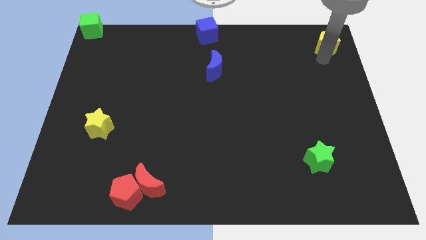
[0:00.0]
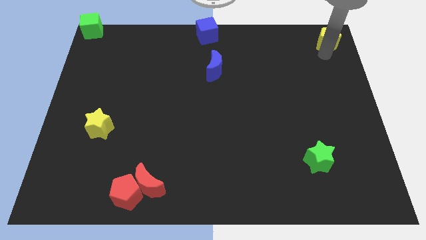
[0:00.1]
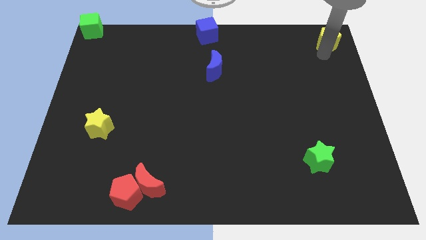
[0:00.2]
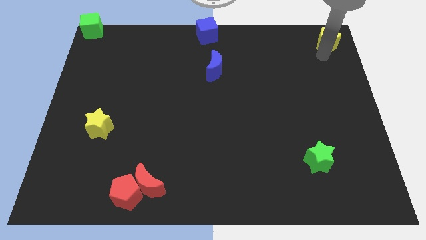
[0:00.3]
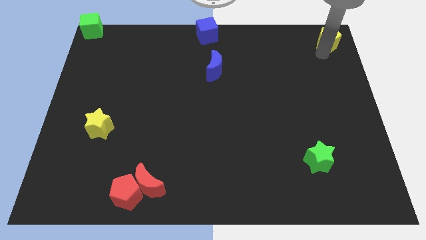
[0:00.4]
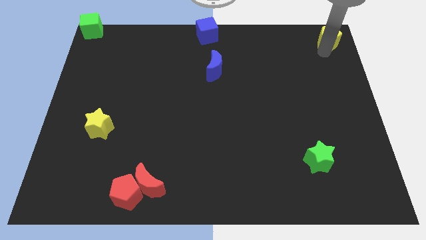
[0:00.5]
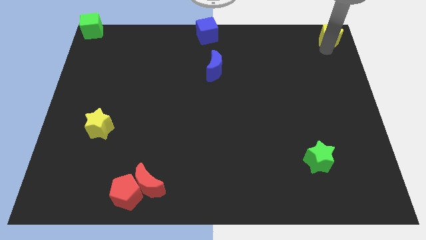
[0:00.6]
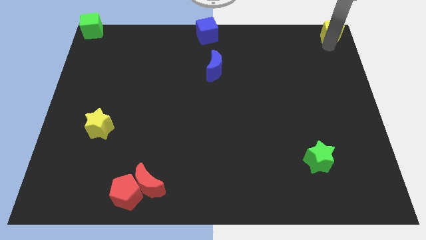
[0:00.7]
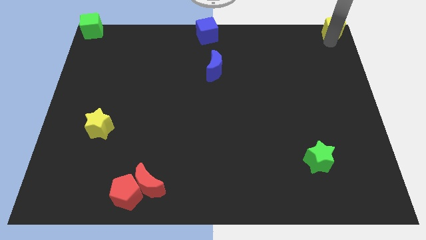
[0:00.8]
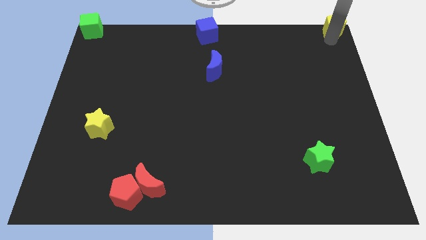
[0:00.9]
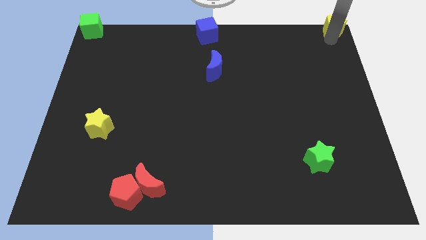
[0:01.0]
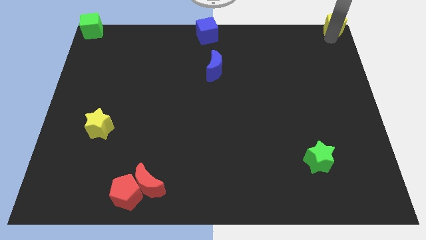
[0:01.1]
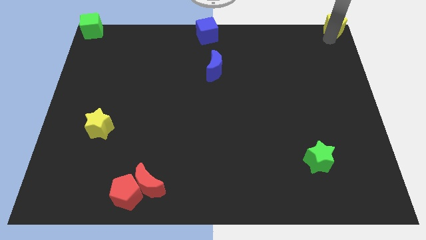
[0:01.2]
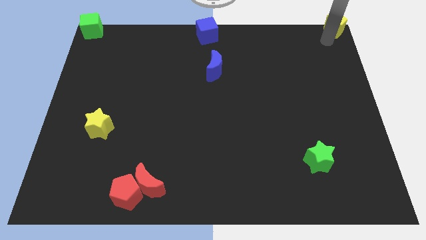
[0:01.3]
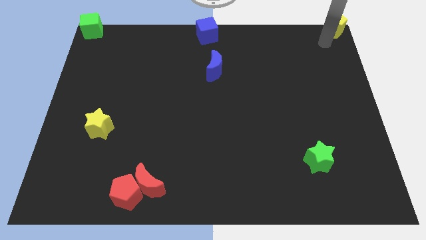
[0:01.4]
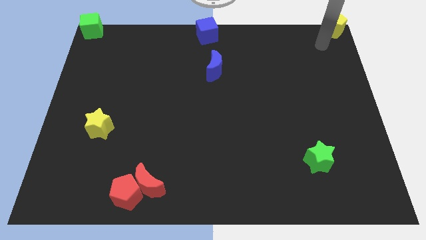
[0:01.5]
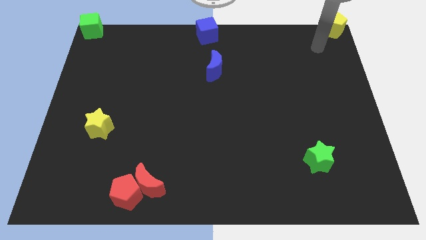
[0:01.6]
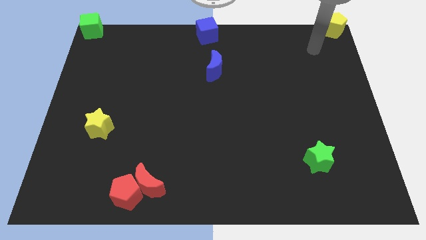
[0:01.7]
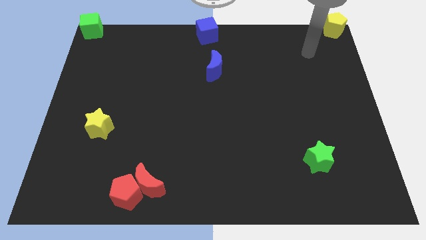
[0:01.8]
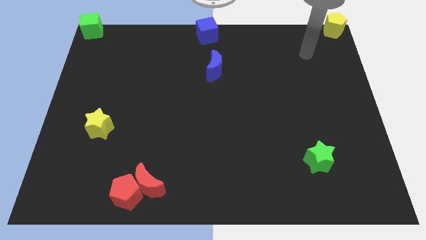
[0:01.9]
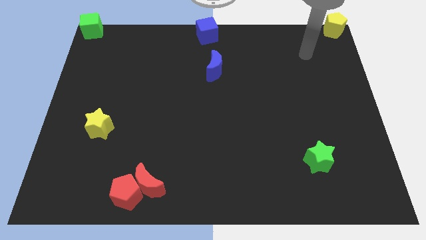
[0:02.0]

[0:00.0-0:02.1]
place the yellow pentagon to the top right corner

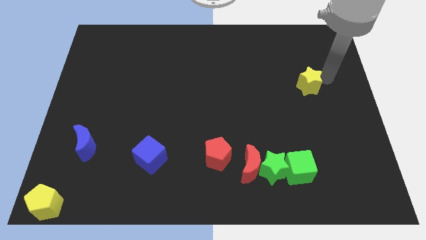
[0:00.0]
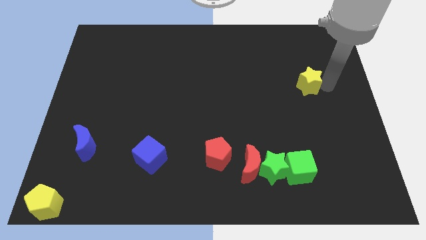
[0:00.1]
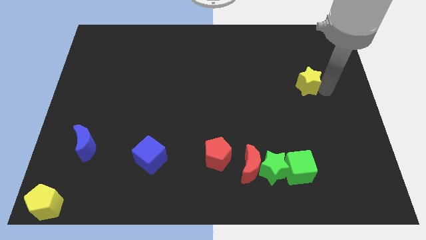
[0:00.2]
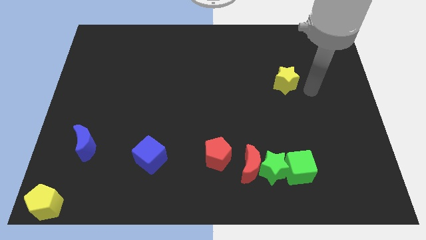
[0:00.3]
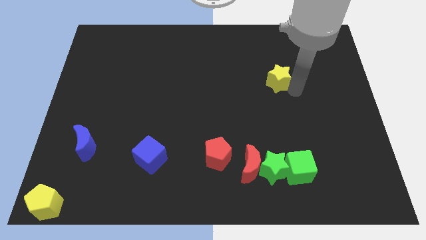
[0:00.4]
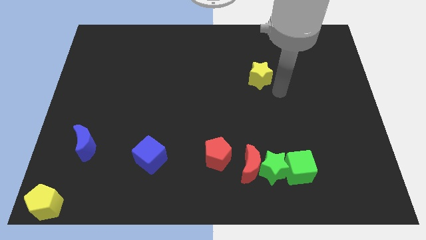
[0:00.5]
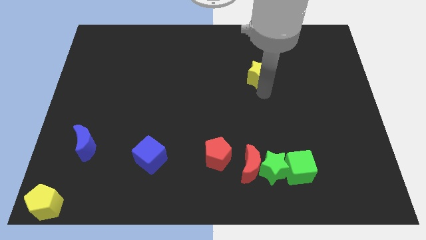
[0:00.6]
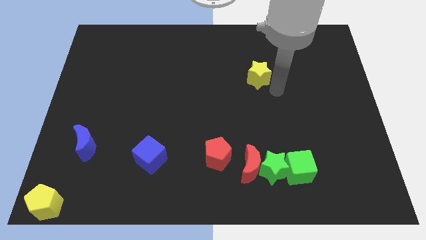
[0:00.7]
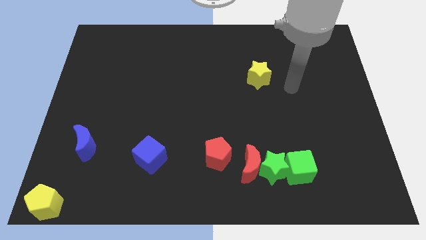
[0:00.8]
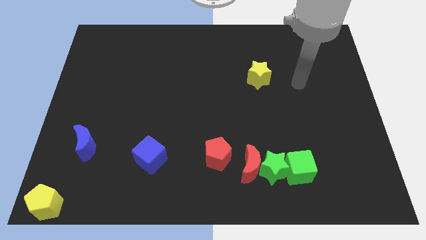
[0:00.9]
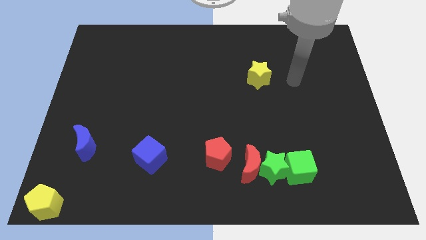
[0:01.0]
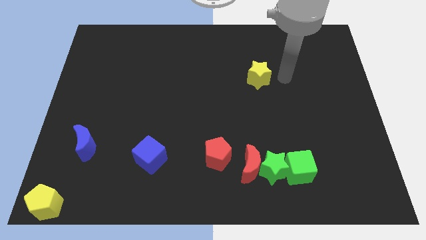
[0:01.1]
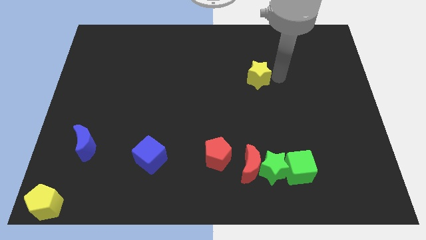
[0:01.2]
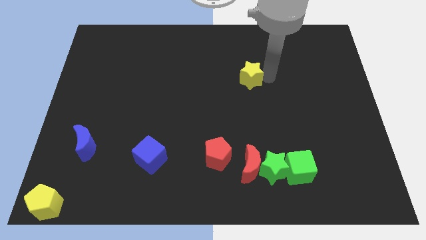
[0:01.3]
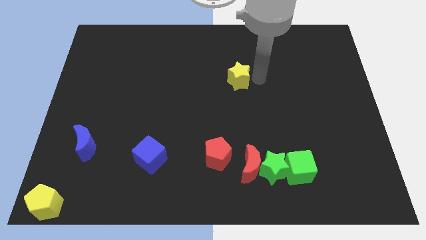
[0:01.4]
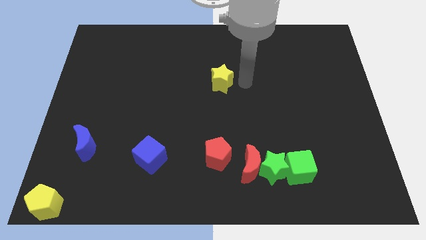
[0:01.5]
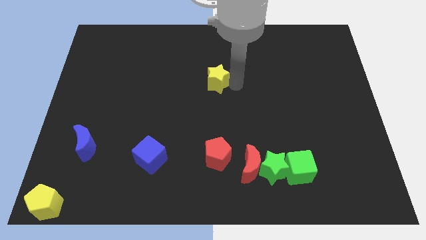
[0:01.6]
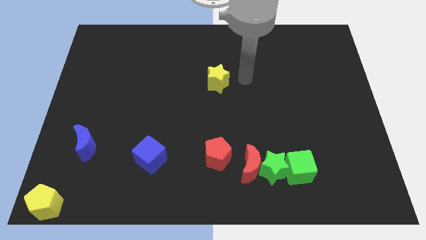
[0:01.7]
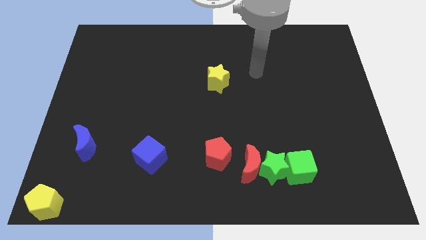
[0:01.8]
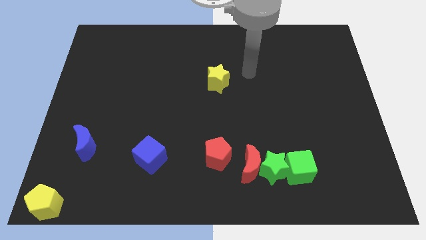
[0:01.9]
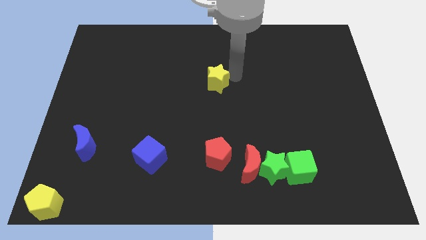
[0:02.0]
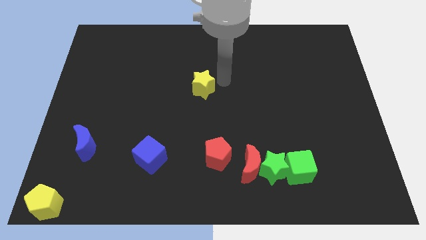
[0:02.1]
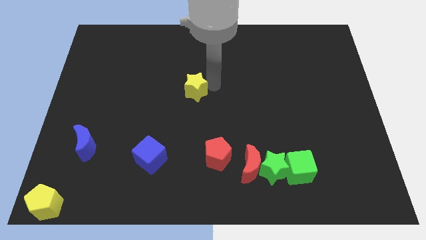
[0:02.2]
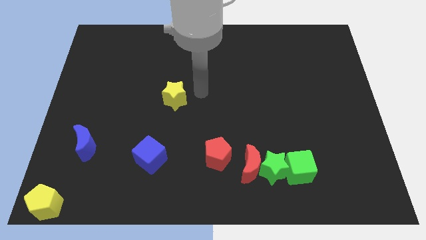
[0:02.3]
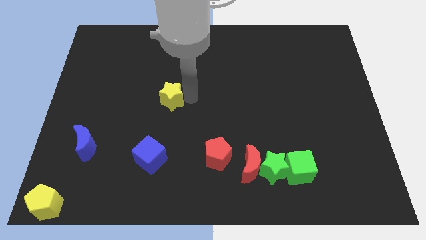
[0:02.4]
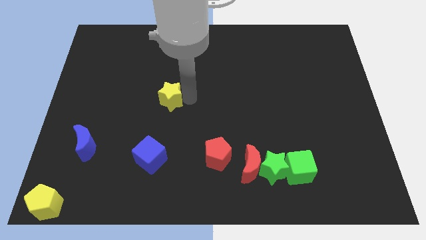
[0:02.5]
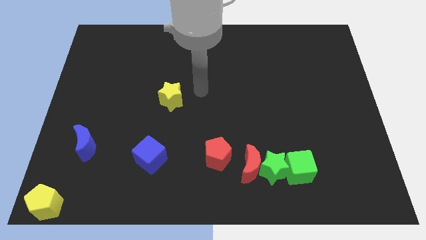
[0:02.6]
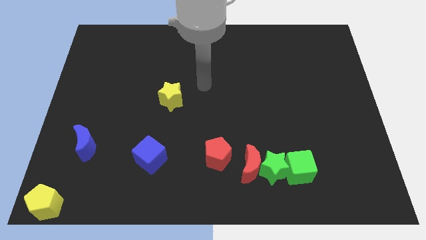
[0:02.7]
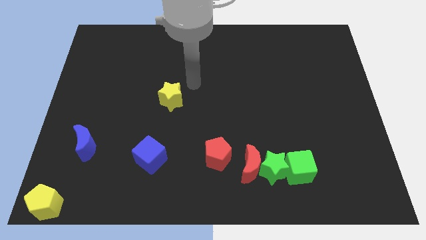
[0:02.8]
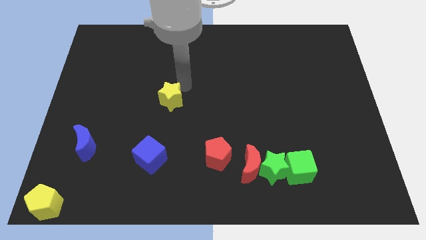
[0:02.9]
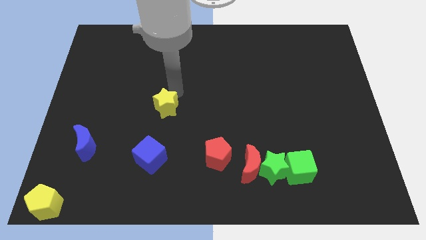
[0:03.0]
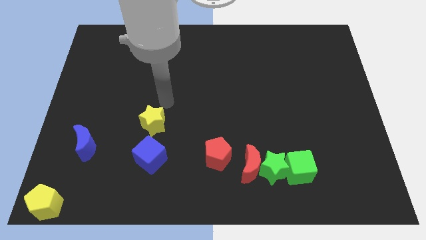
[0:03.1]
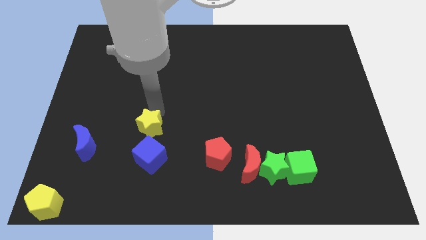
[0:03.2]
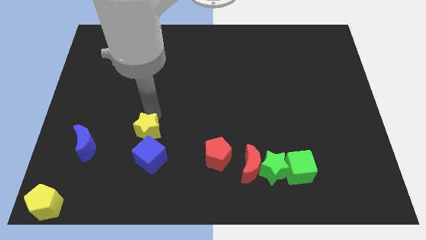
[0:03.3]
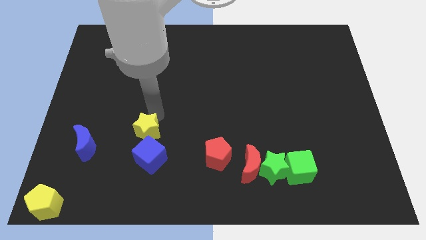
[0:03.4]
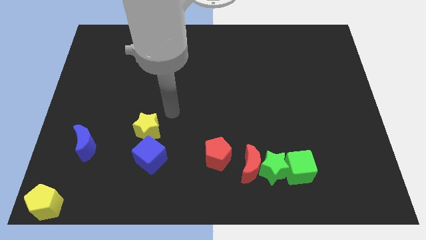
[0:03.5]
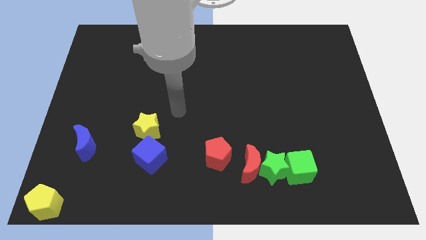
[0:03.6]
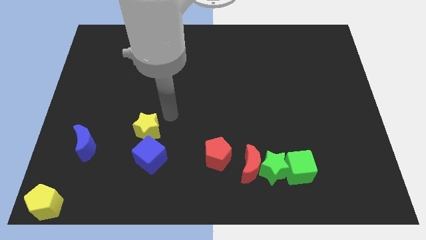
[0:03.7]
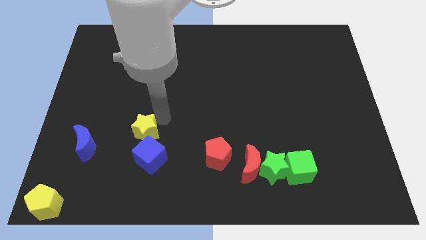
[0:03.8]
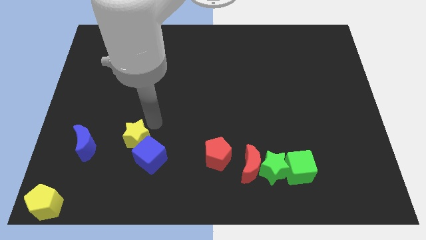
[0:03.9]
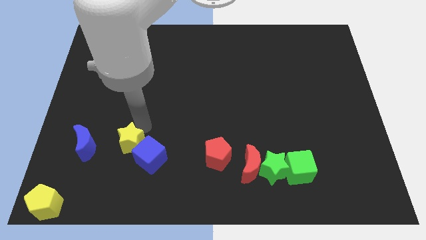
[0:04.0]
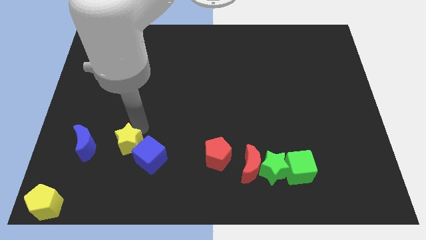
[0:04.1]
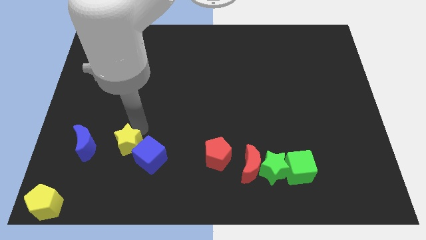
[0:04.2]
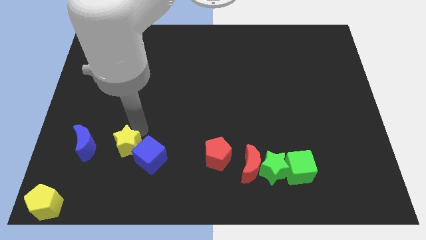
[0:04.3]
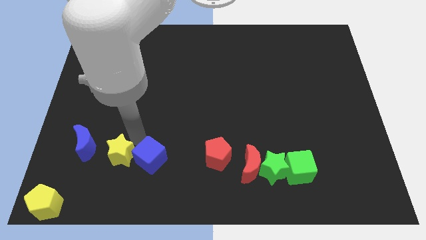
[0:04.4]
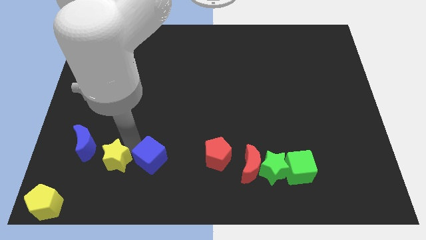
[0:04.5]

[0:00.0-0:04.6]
put the yellow star in between blue crescent and blue cube

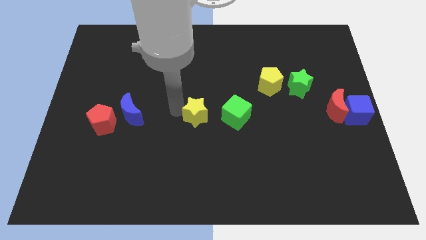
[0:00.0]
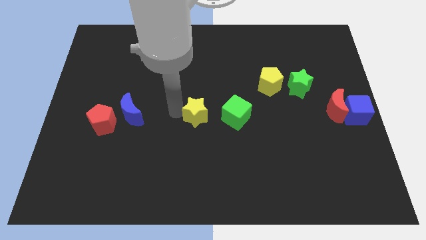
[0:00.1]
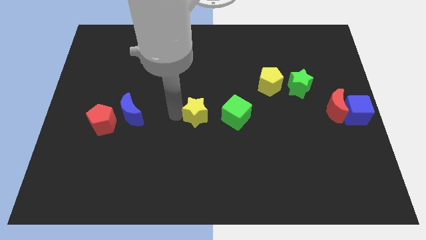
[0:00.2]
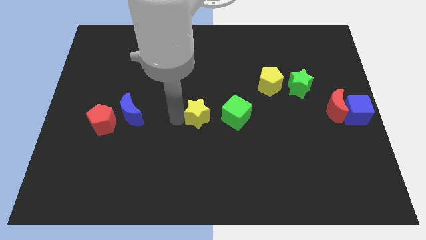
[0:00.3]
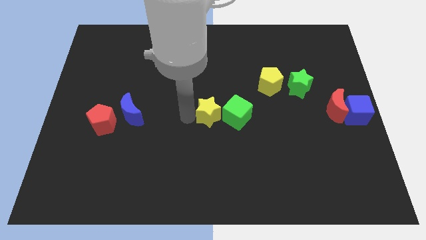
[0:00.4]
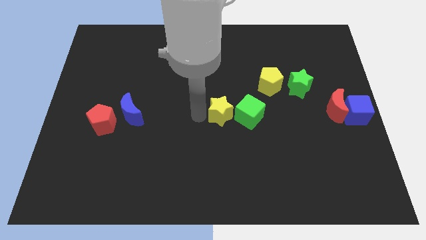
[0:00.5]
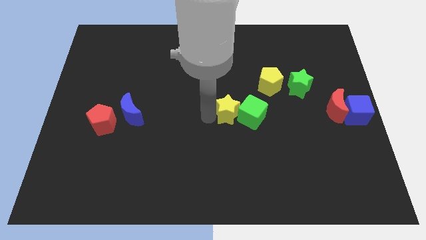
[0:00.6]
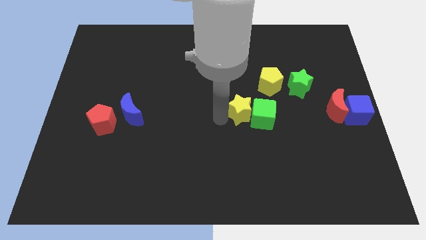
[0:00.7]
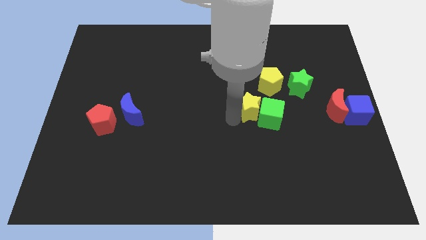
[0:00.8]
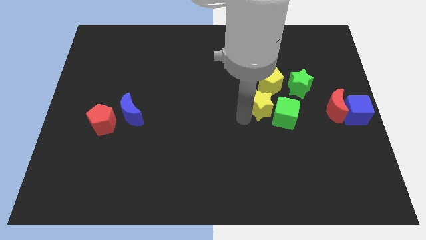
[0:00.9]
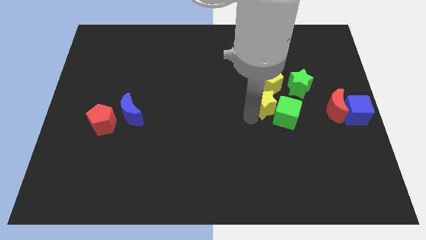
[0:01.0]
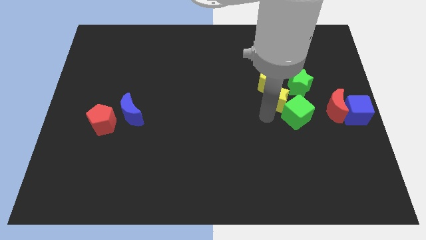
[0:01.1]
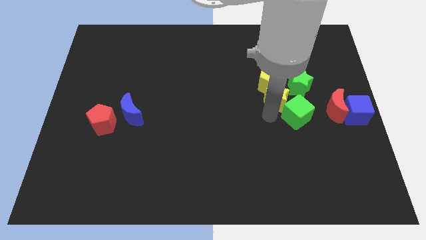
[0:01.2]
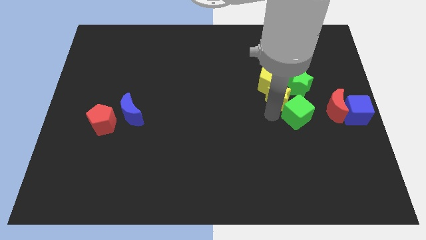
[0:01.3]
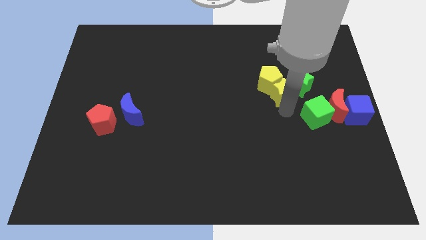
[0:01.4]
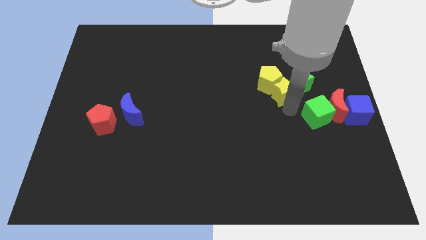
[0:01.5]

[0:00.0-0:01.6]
push yellow star into green star

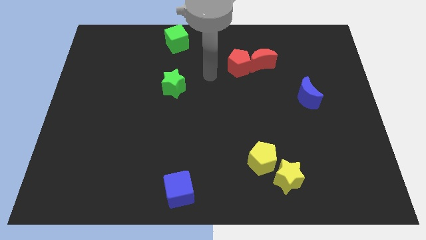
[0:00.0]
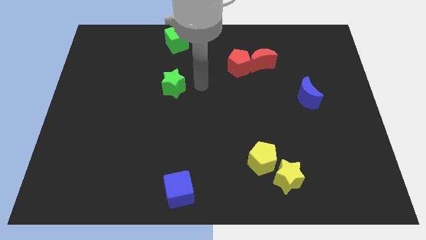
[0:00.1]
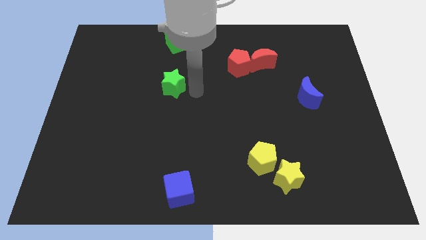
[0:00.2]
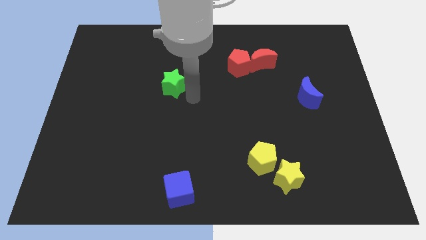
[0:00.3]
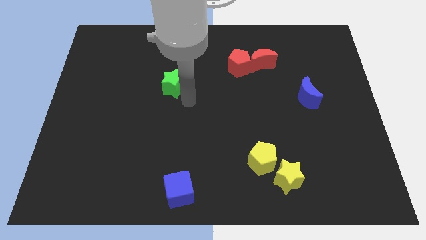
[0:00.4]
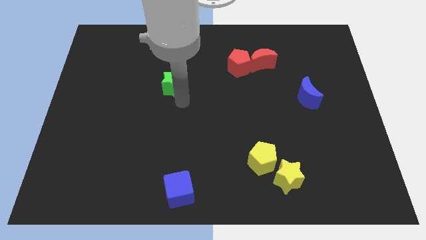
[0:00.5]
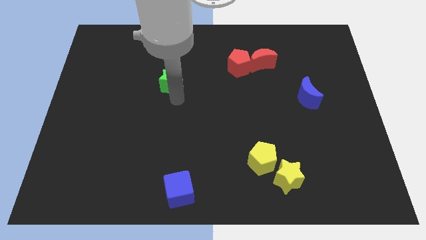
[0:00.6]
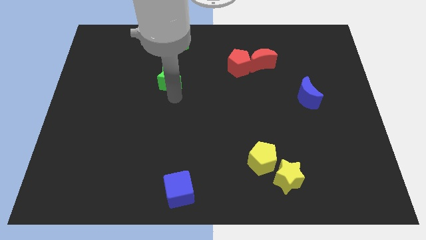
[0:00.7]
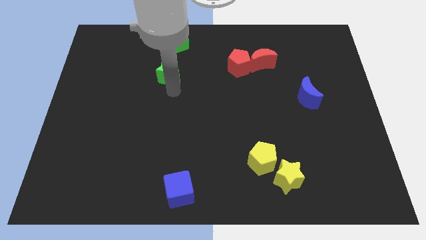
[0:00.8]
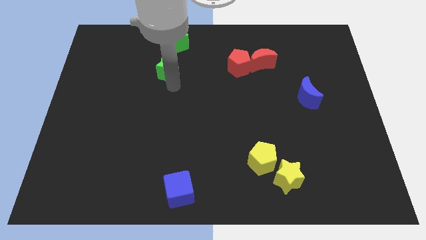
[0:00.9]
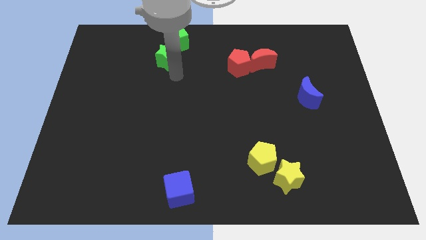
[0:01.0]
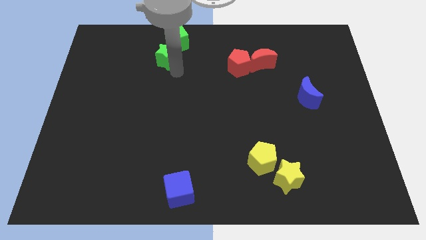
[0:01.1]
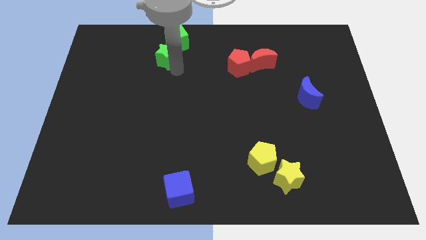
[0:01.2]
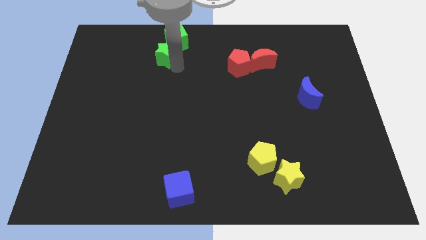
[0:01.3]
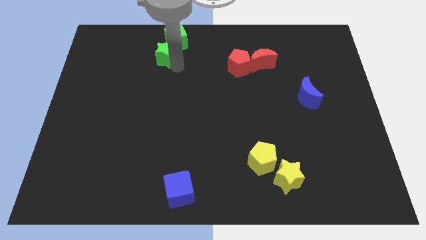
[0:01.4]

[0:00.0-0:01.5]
move the green star below to the green cube
